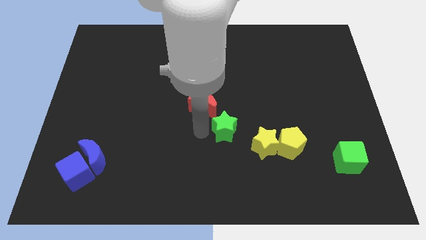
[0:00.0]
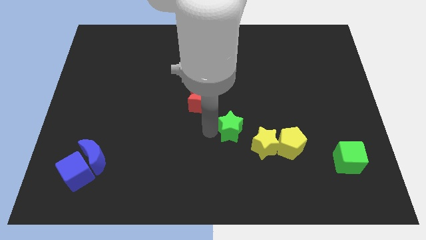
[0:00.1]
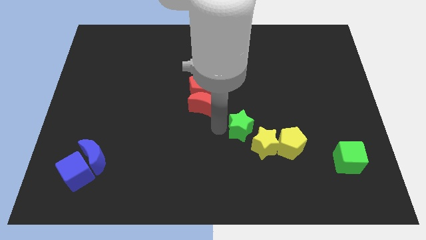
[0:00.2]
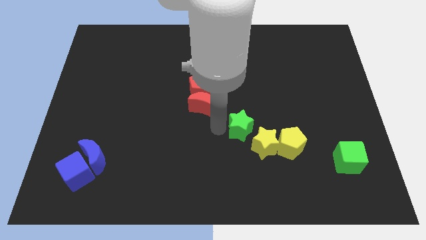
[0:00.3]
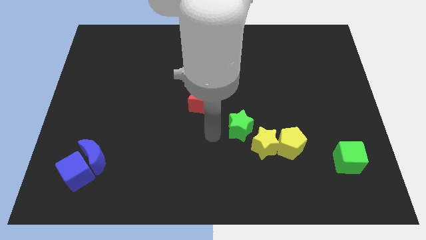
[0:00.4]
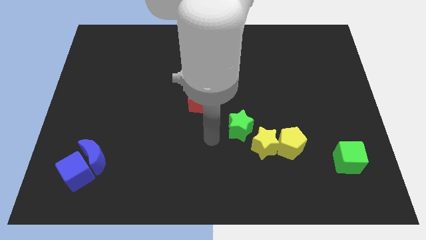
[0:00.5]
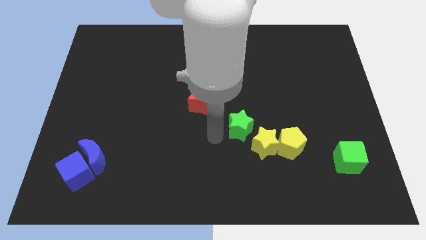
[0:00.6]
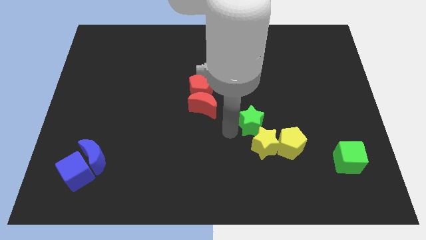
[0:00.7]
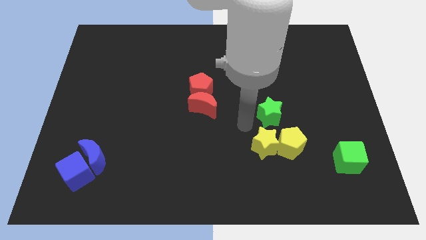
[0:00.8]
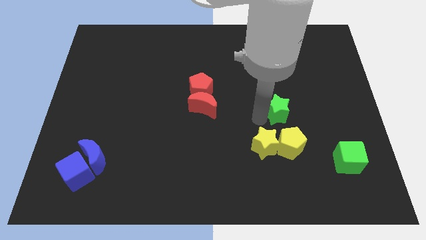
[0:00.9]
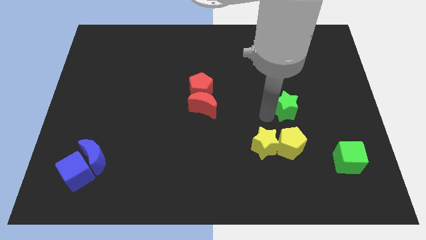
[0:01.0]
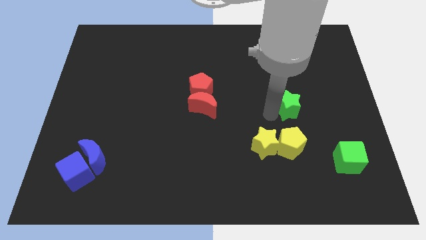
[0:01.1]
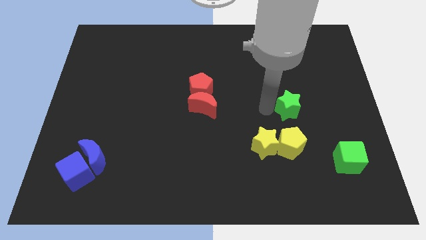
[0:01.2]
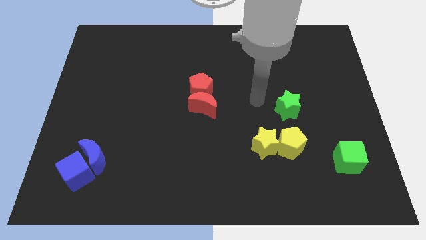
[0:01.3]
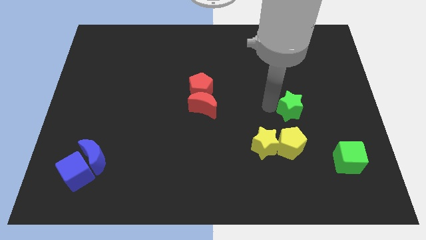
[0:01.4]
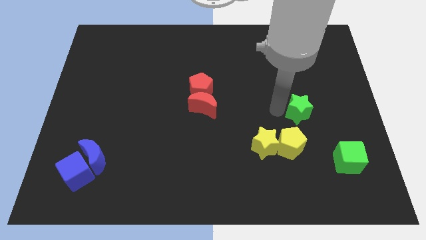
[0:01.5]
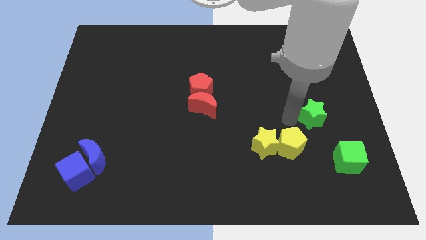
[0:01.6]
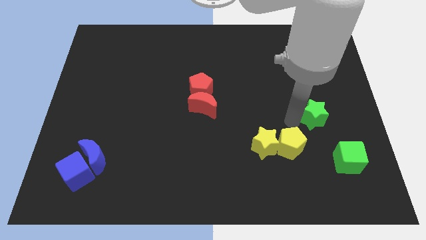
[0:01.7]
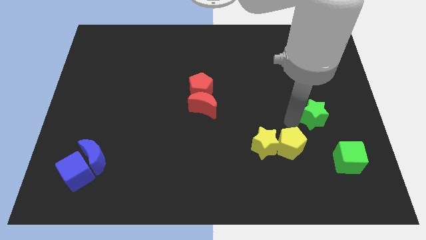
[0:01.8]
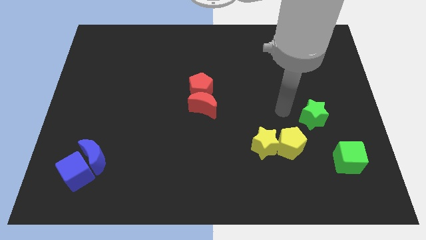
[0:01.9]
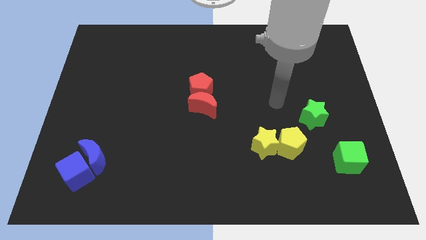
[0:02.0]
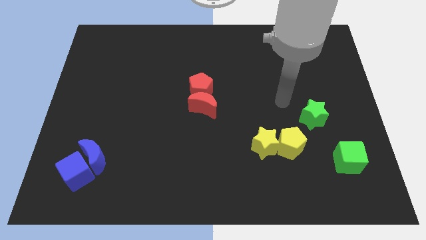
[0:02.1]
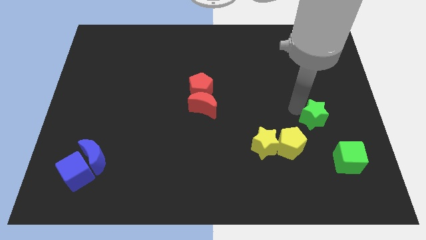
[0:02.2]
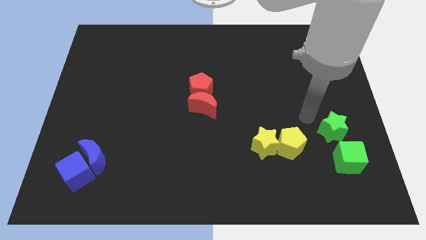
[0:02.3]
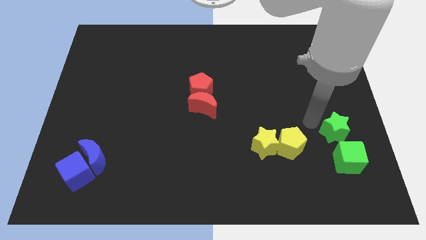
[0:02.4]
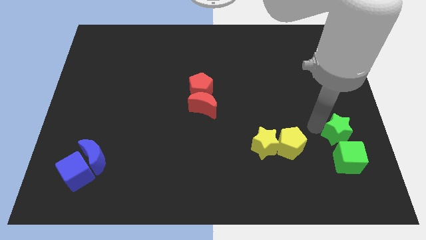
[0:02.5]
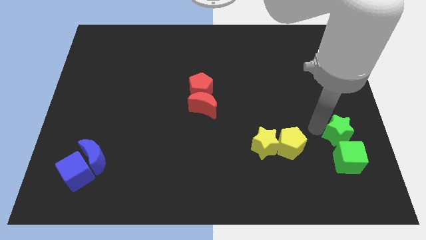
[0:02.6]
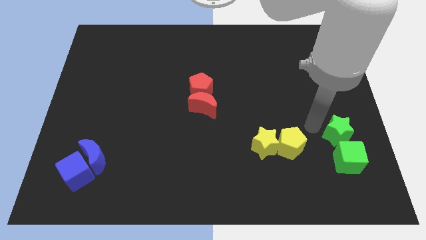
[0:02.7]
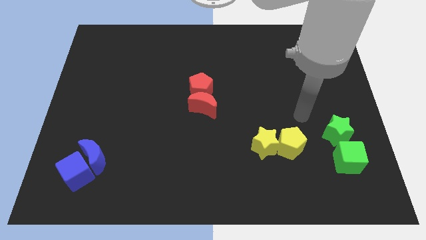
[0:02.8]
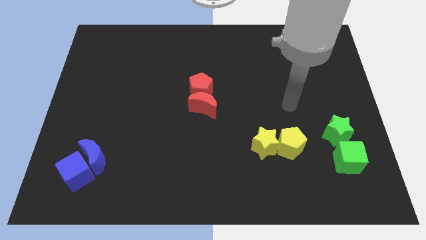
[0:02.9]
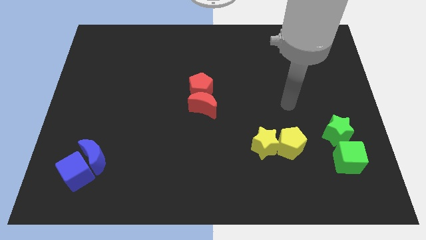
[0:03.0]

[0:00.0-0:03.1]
move green star to the top side of the green cube

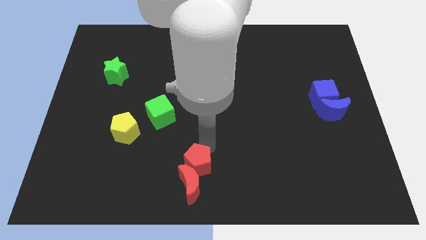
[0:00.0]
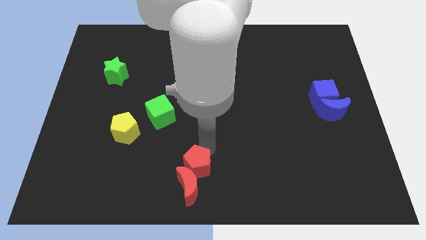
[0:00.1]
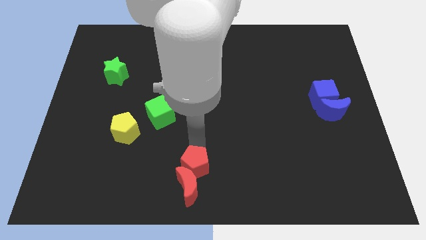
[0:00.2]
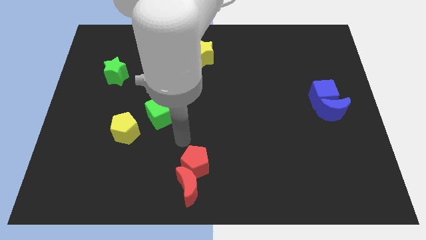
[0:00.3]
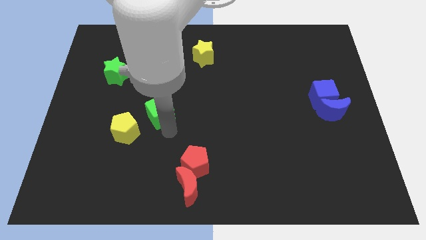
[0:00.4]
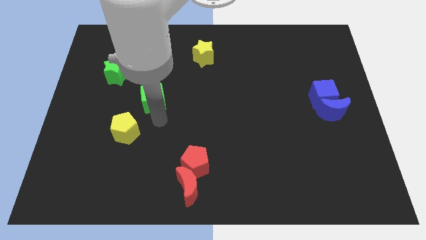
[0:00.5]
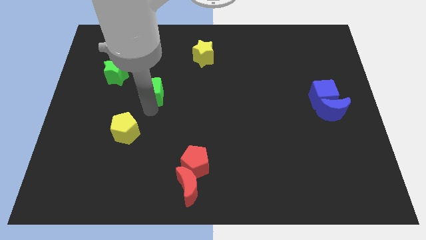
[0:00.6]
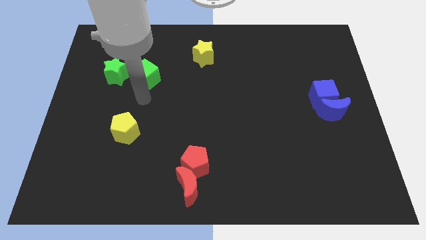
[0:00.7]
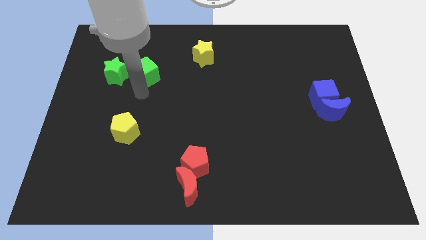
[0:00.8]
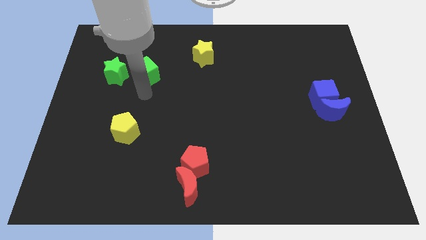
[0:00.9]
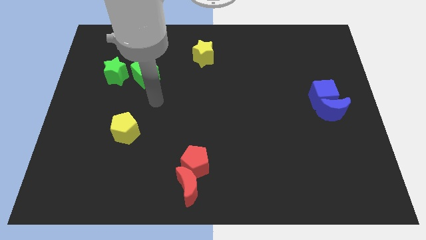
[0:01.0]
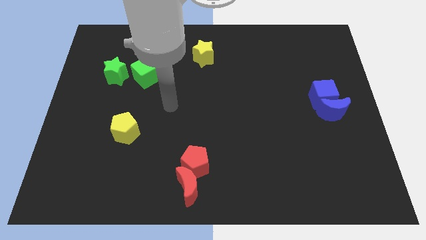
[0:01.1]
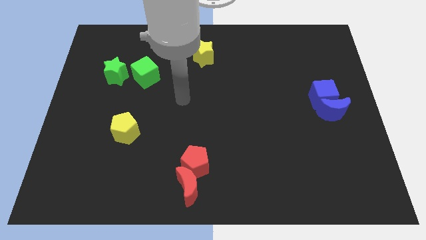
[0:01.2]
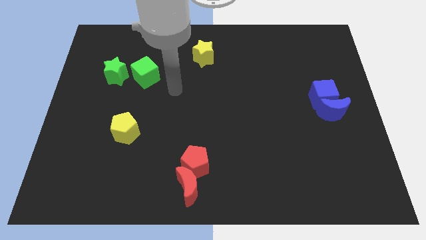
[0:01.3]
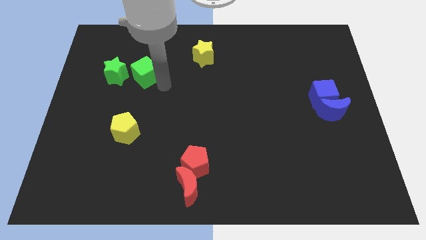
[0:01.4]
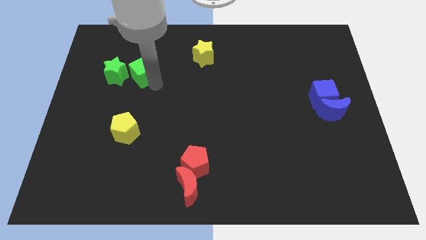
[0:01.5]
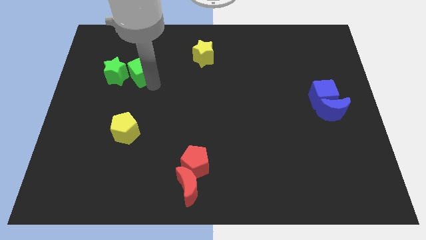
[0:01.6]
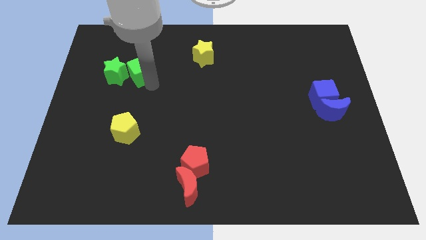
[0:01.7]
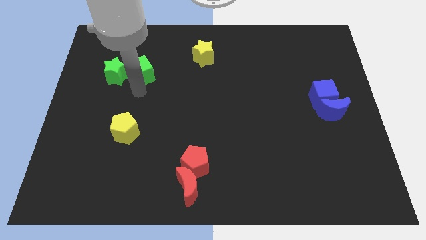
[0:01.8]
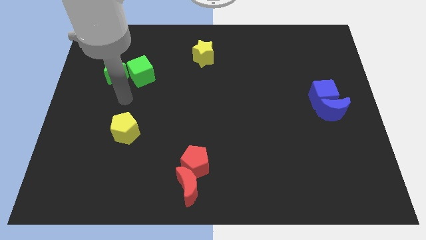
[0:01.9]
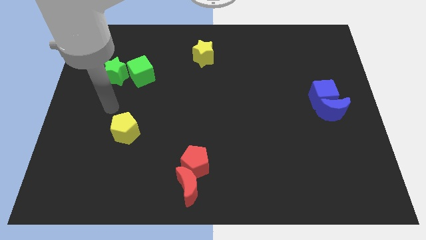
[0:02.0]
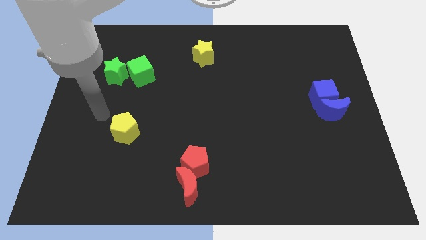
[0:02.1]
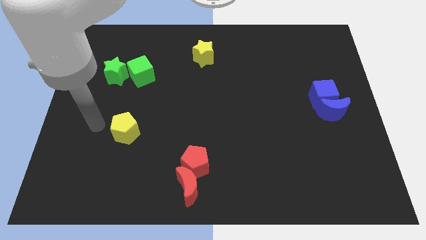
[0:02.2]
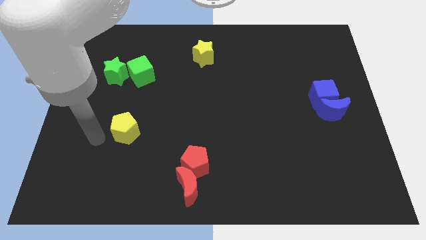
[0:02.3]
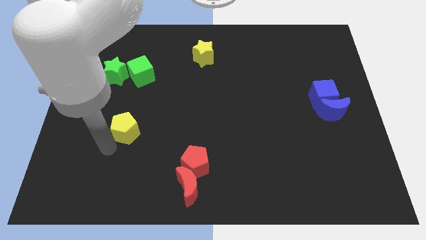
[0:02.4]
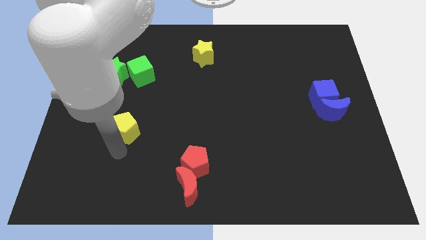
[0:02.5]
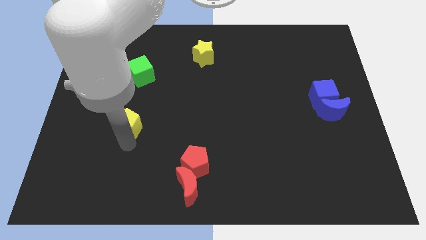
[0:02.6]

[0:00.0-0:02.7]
place the green cube at the right side of the green star

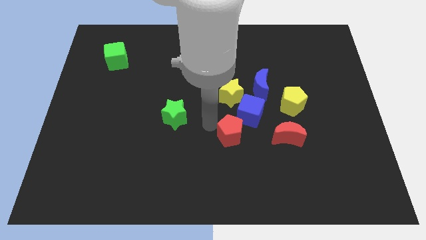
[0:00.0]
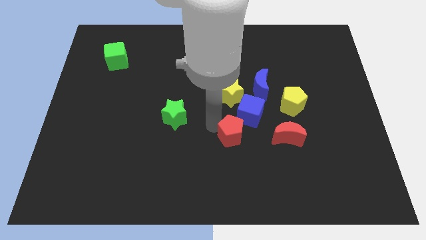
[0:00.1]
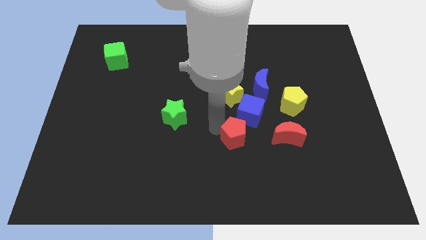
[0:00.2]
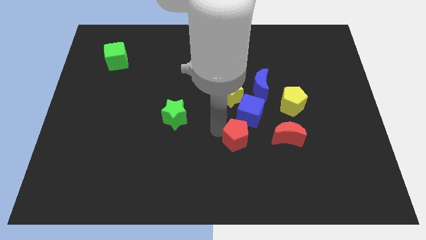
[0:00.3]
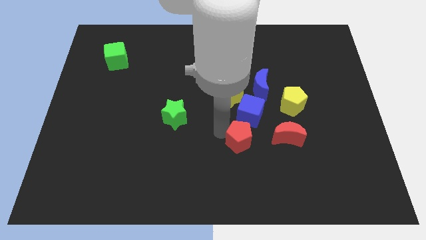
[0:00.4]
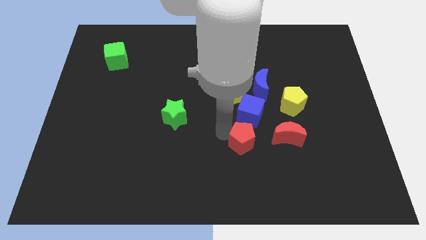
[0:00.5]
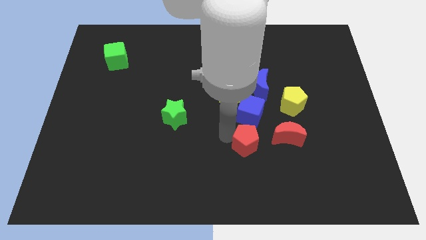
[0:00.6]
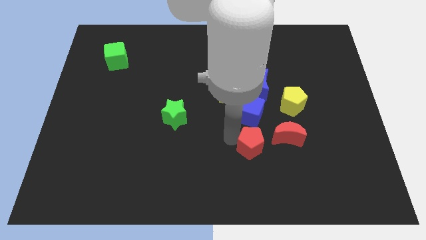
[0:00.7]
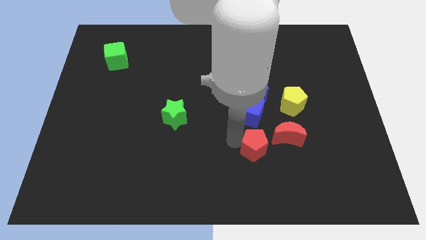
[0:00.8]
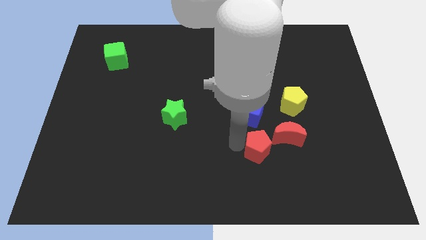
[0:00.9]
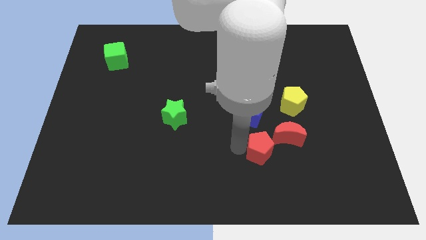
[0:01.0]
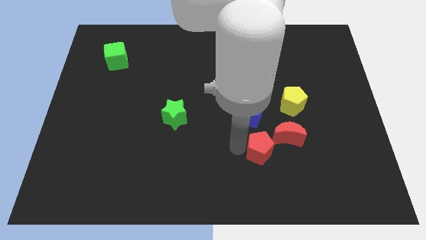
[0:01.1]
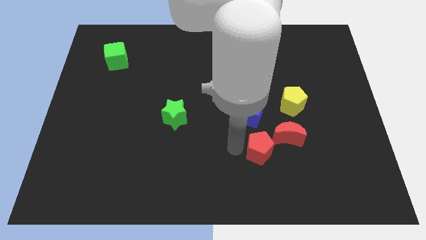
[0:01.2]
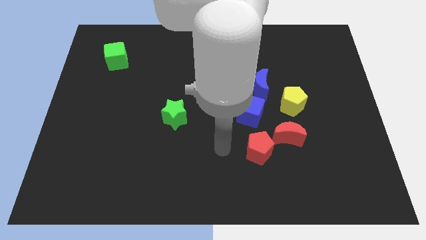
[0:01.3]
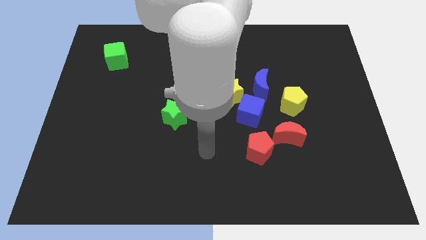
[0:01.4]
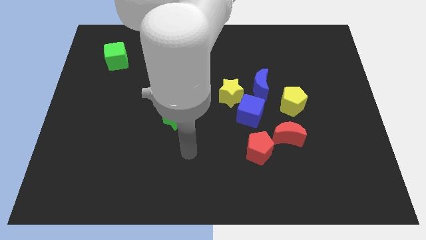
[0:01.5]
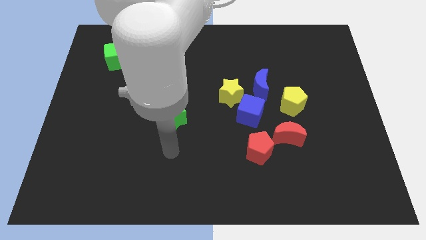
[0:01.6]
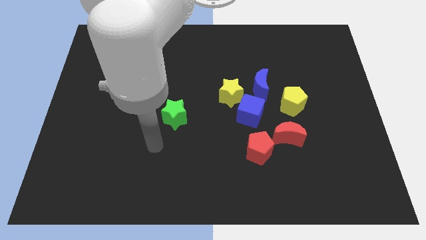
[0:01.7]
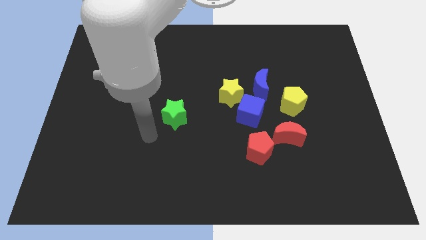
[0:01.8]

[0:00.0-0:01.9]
move the red pentagon to the bottom left of the red crescent

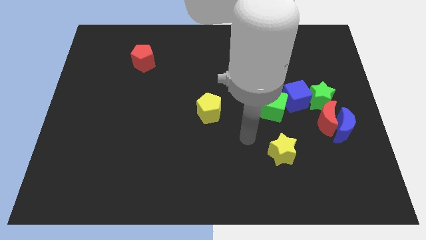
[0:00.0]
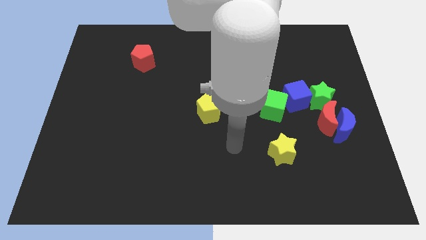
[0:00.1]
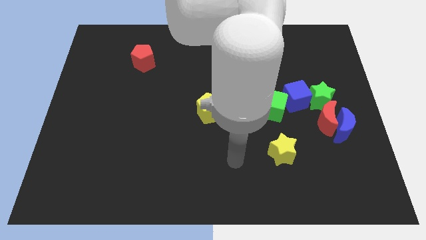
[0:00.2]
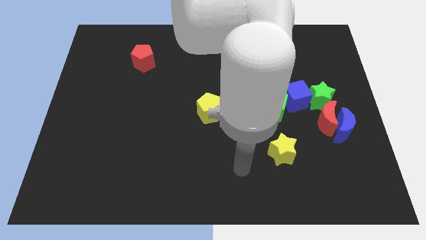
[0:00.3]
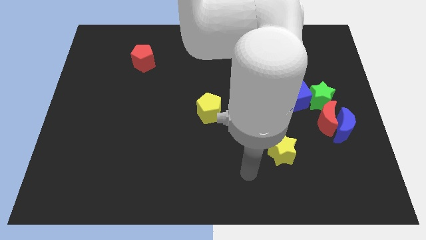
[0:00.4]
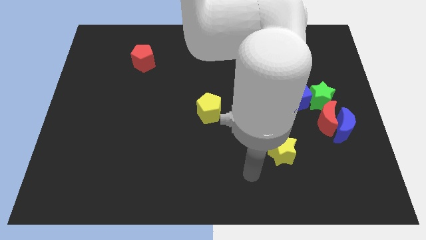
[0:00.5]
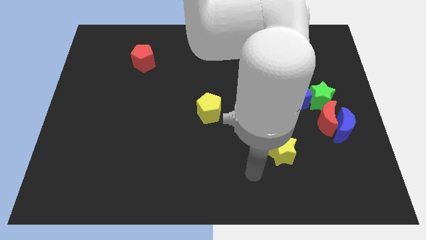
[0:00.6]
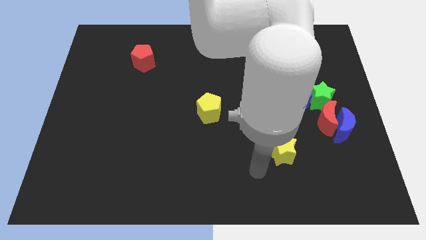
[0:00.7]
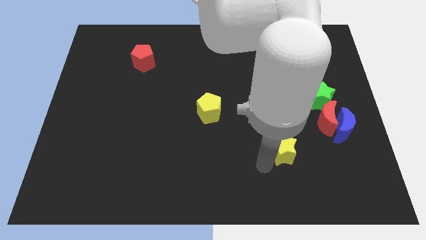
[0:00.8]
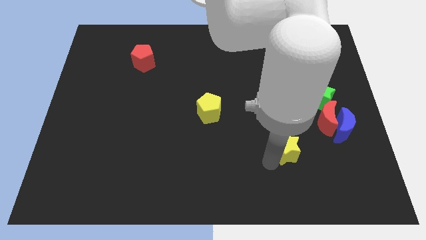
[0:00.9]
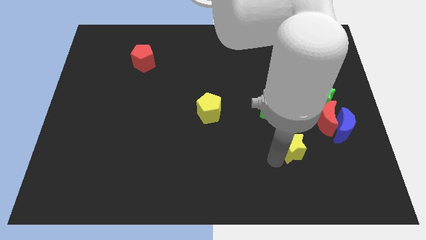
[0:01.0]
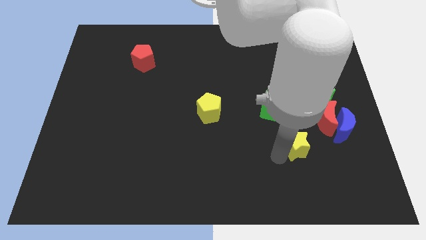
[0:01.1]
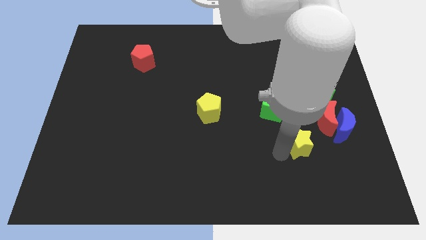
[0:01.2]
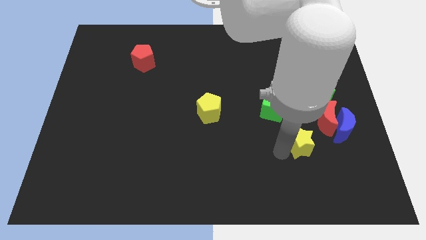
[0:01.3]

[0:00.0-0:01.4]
place the yellow star towards group of blocks

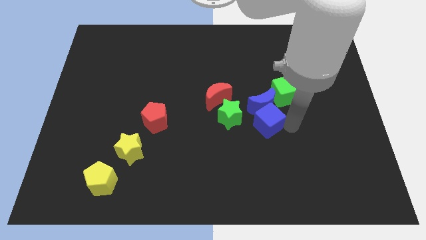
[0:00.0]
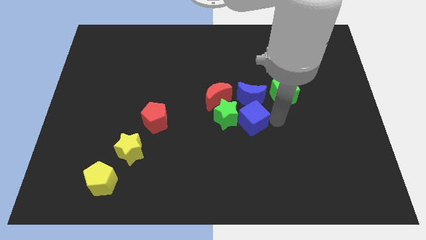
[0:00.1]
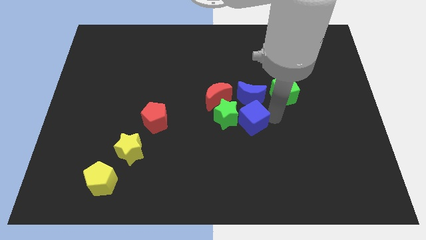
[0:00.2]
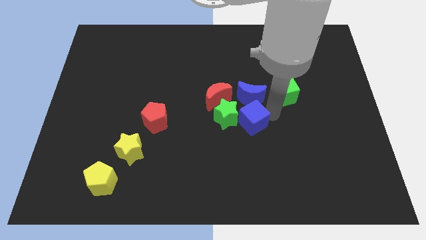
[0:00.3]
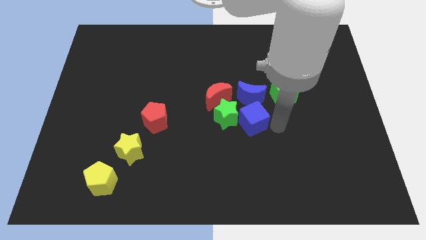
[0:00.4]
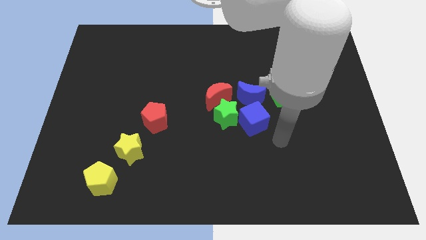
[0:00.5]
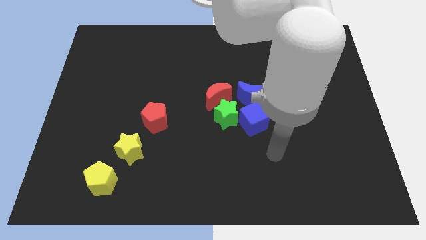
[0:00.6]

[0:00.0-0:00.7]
push blue cube slightly upwards
